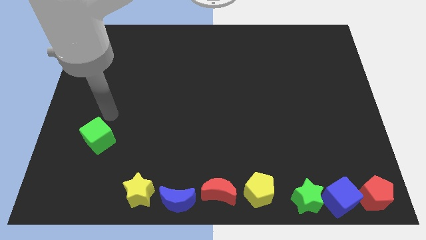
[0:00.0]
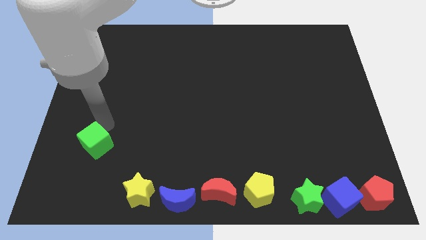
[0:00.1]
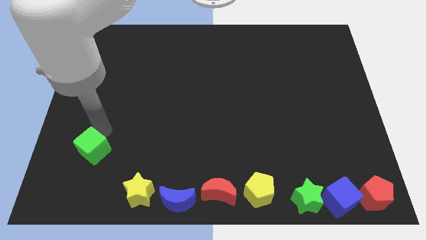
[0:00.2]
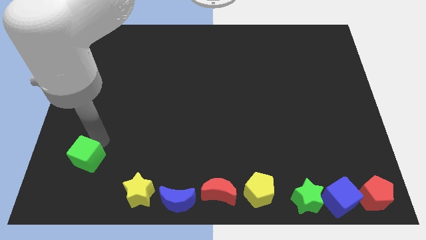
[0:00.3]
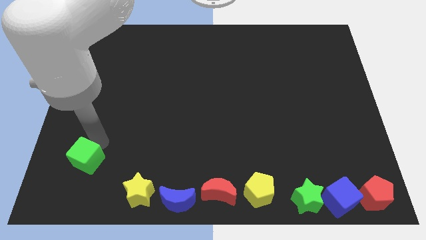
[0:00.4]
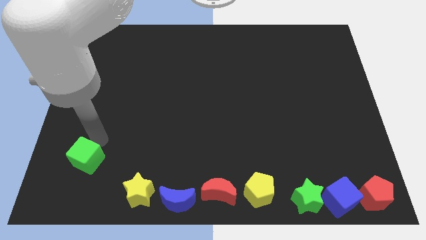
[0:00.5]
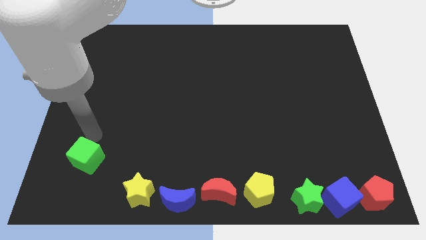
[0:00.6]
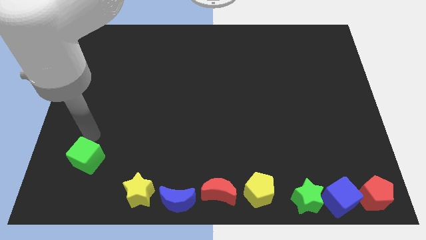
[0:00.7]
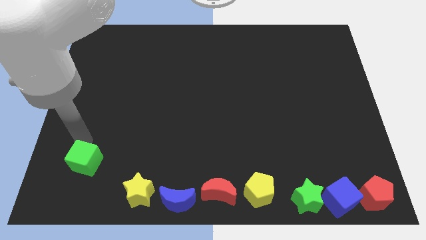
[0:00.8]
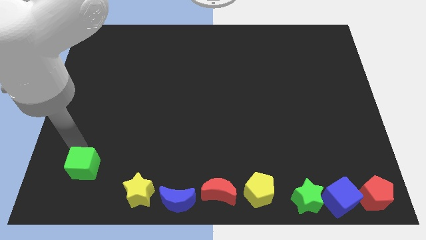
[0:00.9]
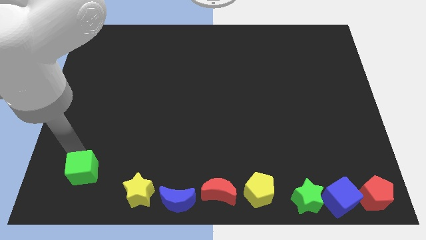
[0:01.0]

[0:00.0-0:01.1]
slide the green cube to the bottom left of the board

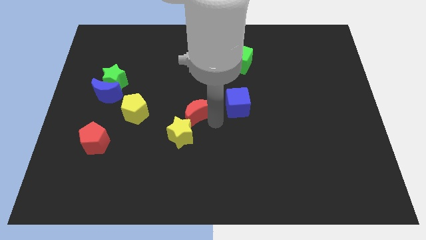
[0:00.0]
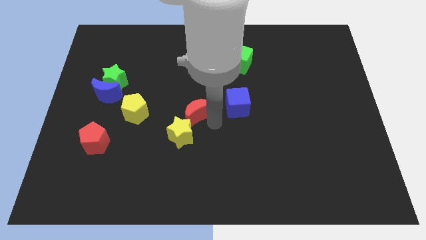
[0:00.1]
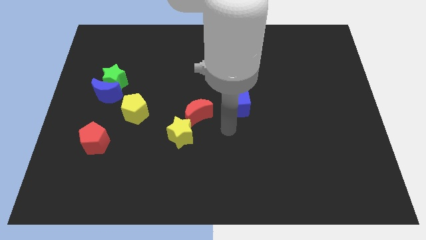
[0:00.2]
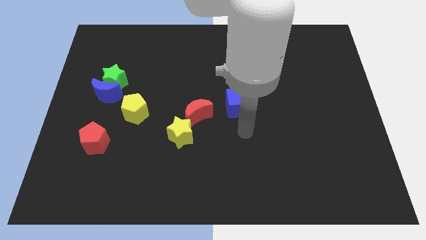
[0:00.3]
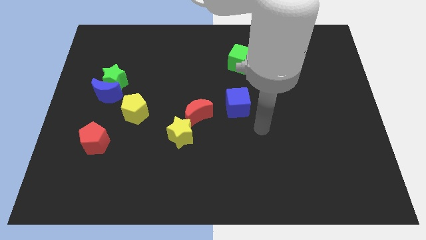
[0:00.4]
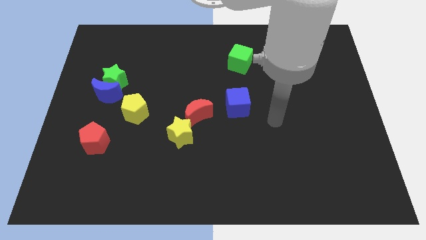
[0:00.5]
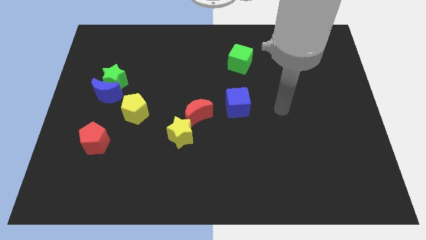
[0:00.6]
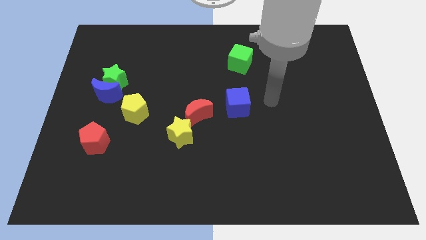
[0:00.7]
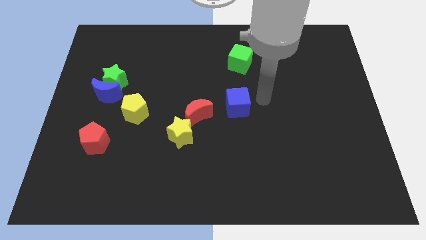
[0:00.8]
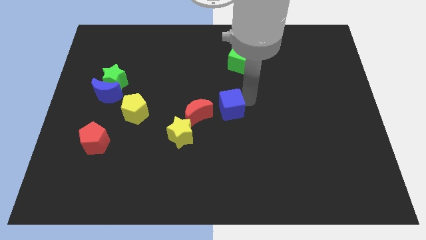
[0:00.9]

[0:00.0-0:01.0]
slide the blue cube slightly to the left

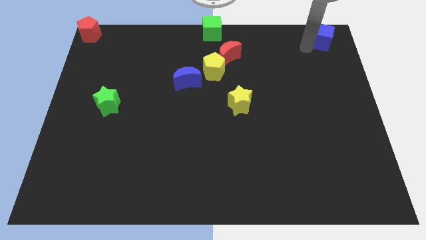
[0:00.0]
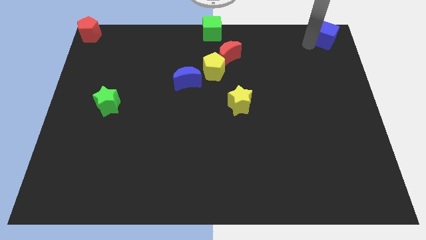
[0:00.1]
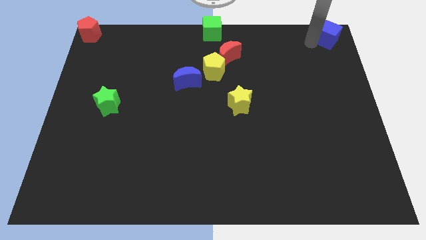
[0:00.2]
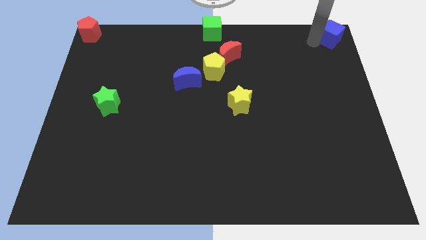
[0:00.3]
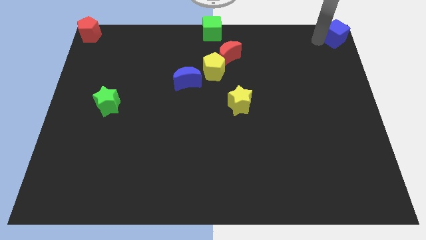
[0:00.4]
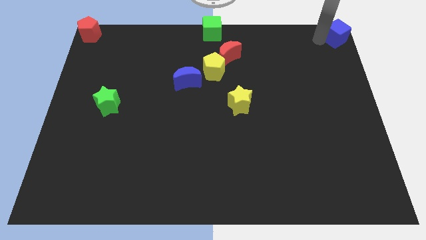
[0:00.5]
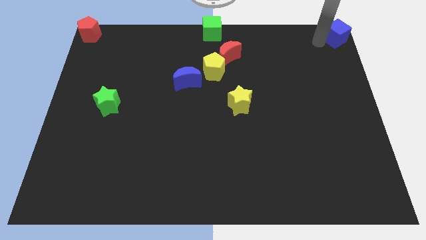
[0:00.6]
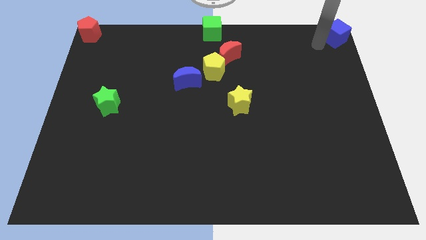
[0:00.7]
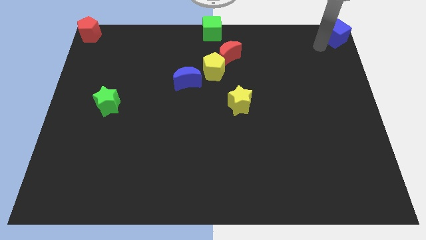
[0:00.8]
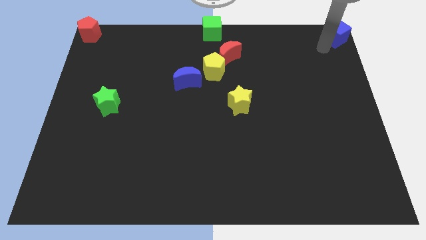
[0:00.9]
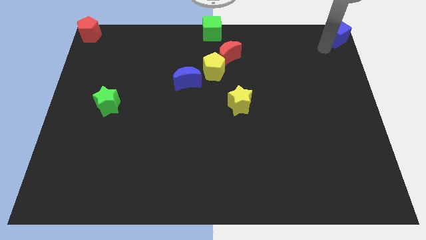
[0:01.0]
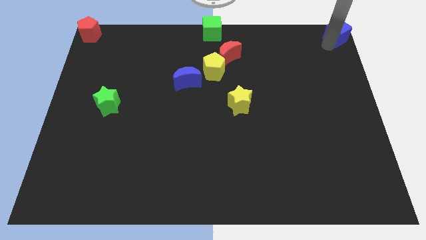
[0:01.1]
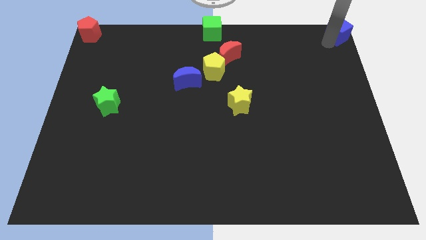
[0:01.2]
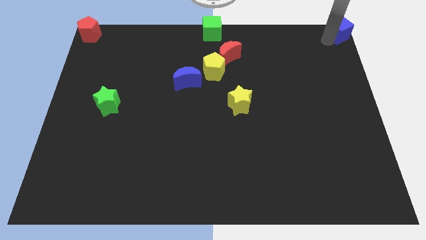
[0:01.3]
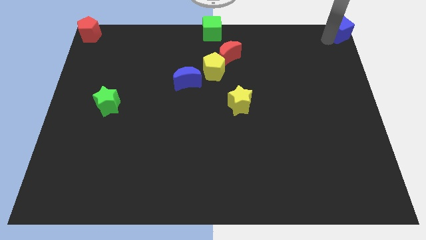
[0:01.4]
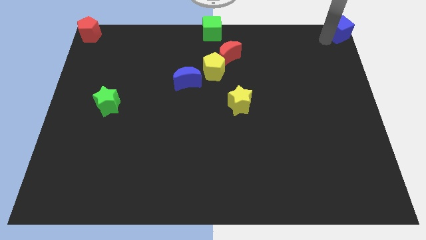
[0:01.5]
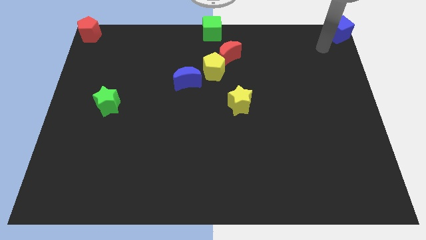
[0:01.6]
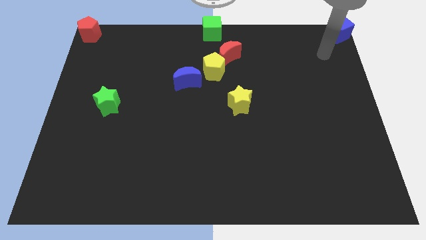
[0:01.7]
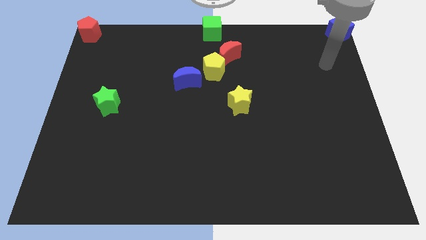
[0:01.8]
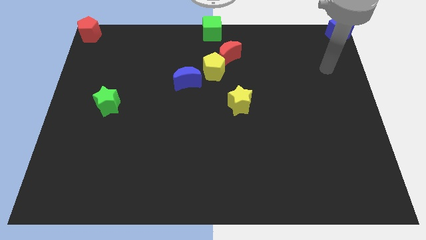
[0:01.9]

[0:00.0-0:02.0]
move the arm away from the blue cube

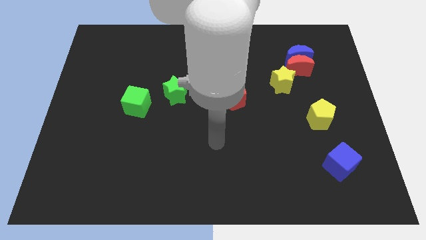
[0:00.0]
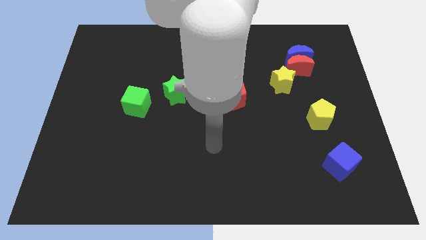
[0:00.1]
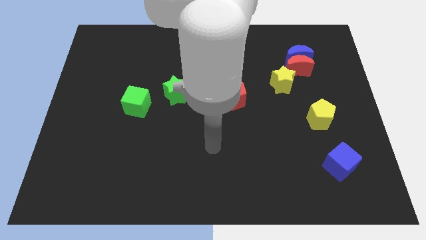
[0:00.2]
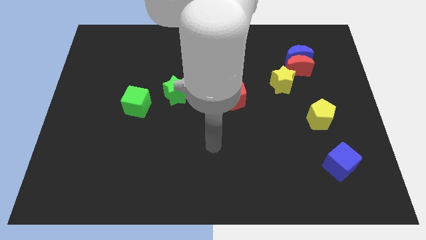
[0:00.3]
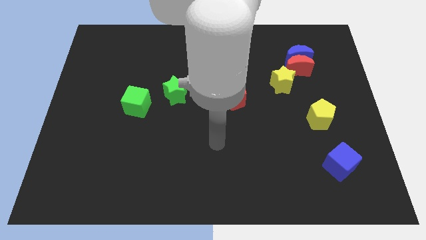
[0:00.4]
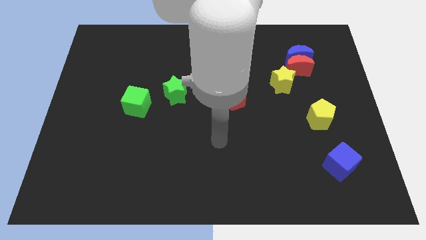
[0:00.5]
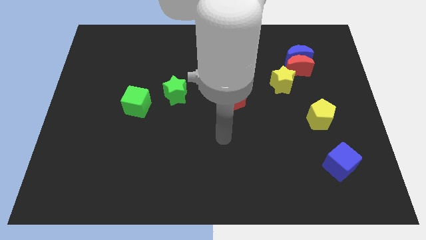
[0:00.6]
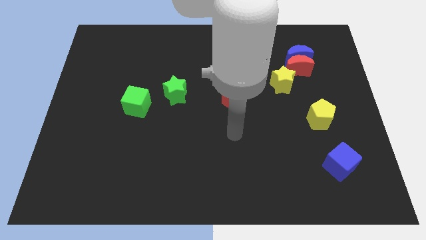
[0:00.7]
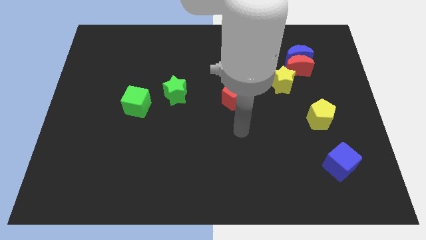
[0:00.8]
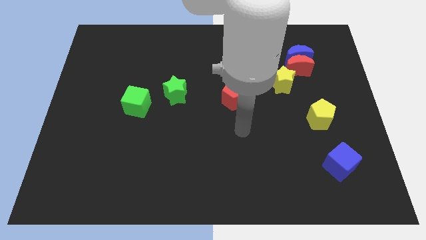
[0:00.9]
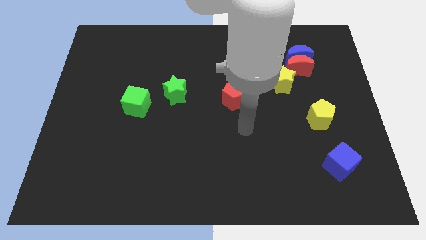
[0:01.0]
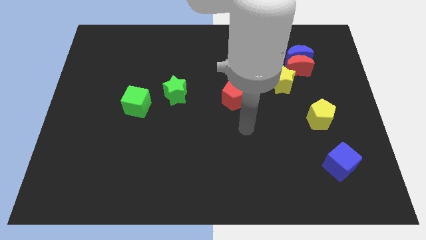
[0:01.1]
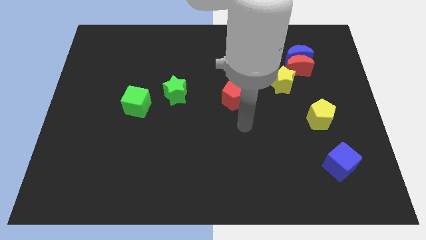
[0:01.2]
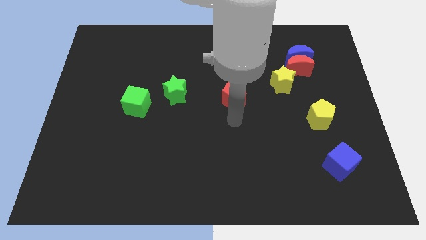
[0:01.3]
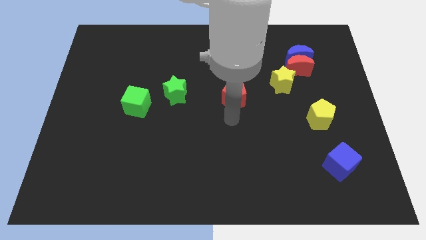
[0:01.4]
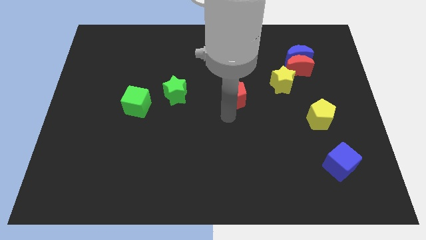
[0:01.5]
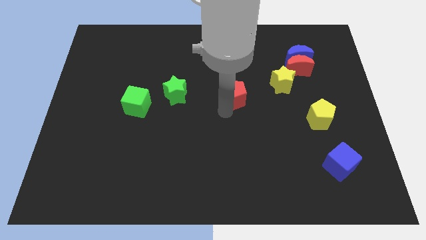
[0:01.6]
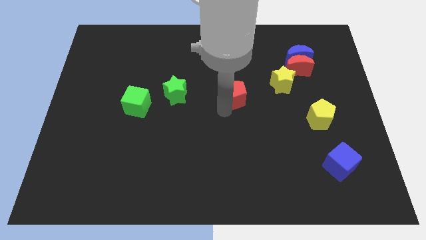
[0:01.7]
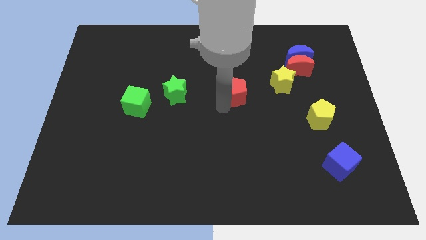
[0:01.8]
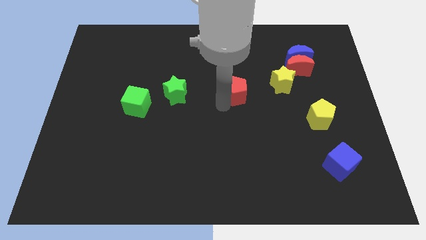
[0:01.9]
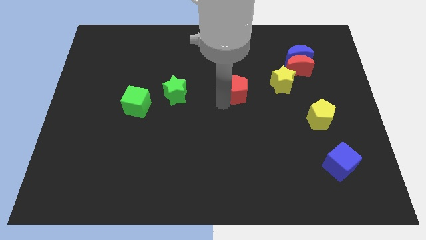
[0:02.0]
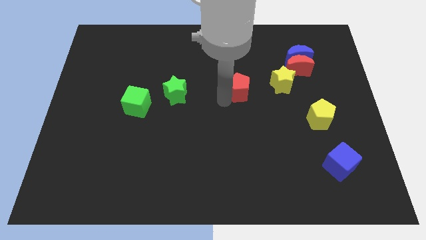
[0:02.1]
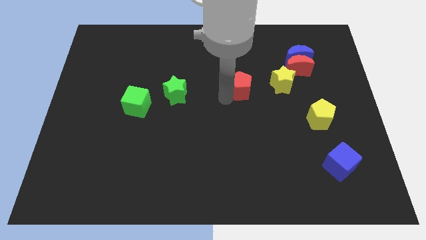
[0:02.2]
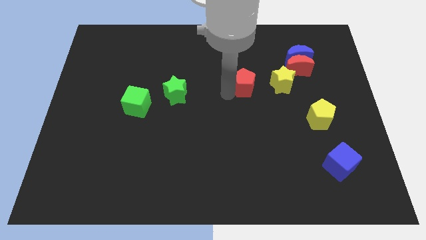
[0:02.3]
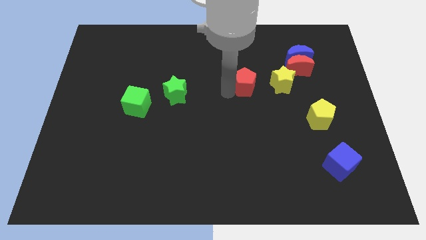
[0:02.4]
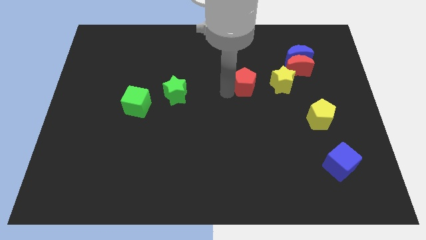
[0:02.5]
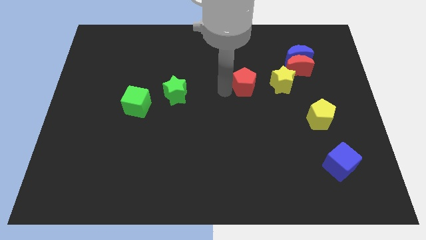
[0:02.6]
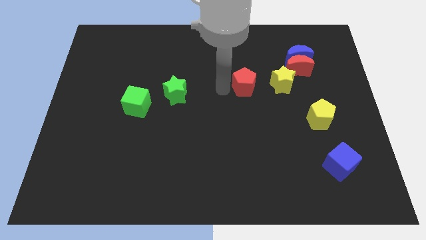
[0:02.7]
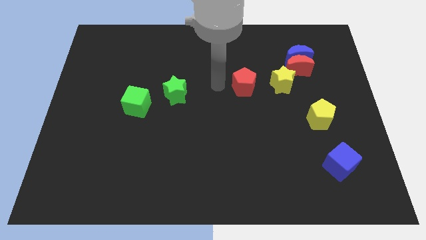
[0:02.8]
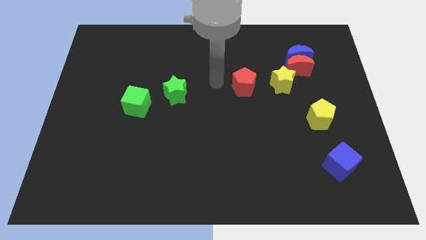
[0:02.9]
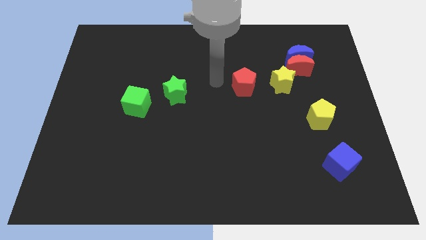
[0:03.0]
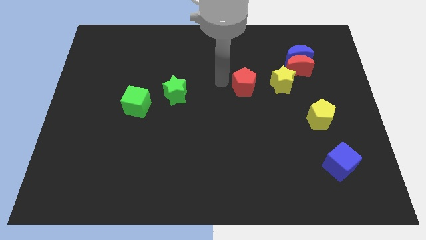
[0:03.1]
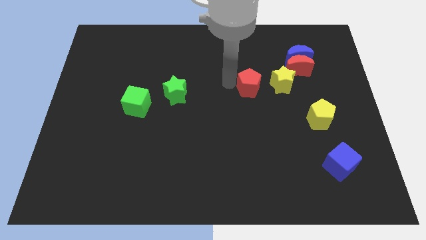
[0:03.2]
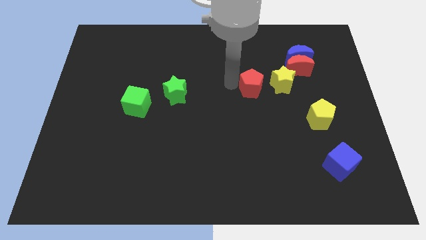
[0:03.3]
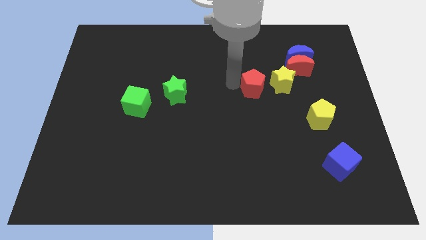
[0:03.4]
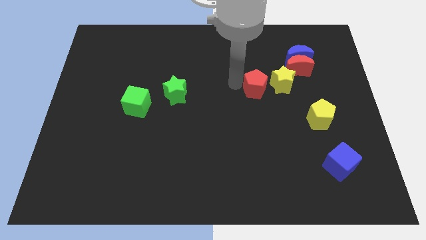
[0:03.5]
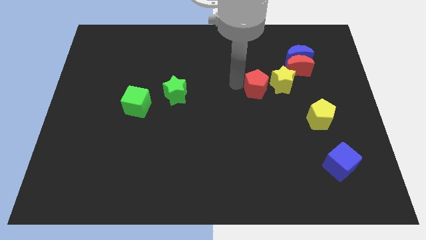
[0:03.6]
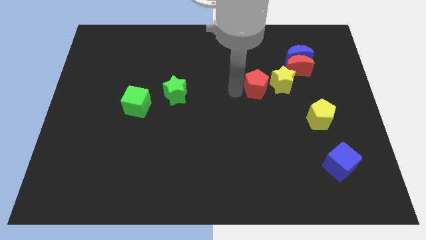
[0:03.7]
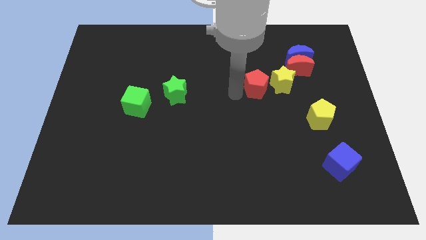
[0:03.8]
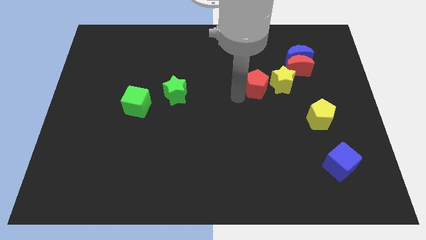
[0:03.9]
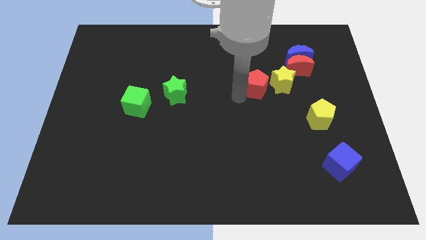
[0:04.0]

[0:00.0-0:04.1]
move the red pentagon to the right of the yellow star

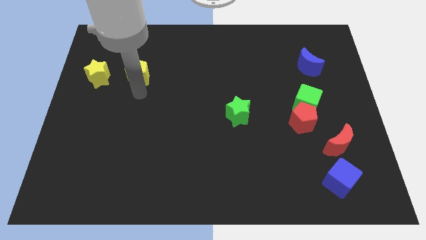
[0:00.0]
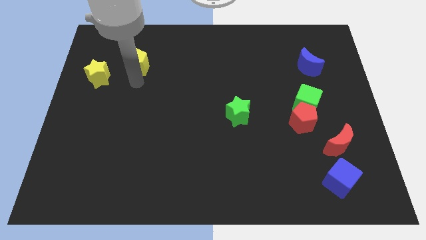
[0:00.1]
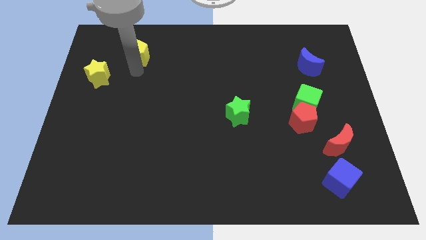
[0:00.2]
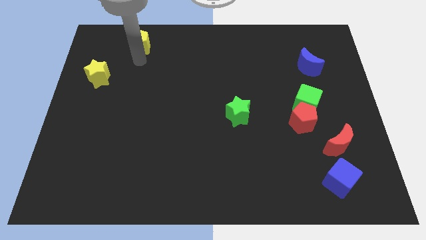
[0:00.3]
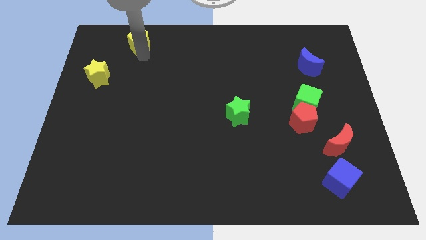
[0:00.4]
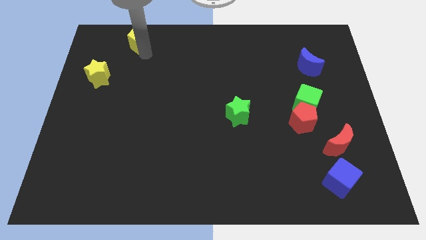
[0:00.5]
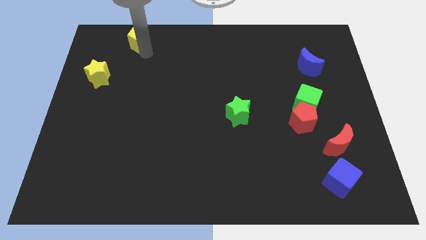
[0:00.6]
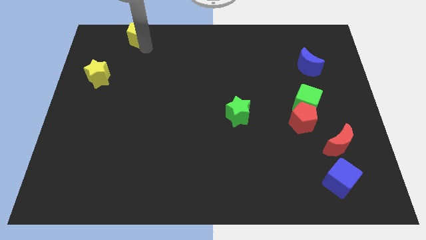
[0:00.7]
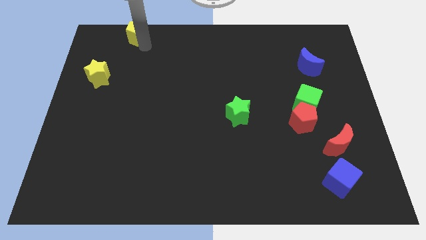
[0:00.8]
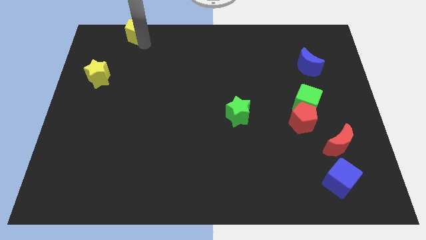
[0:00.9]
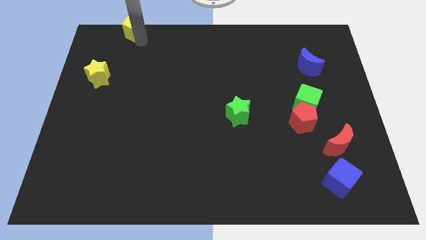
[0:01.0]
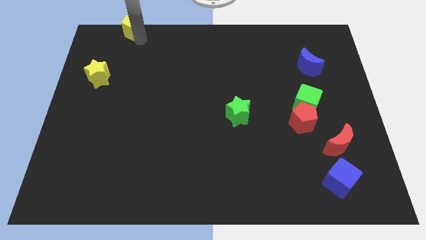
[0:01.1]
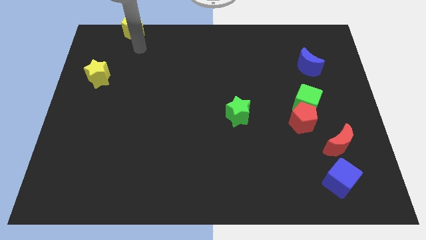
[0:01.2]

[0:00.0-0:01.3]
move the yellow pentagon upwards top of the board
